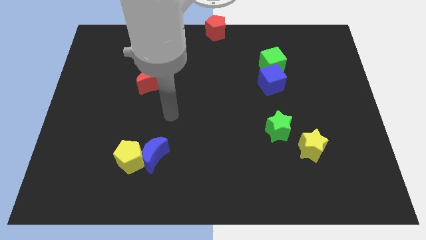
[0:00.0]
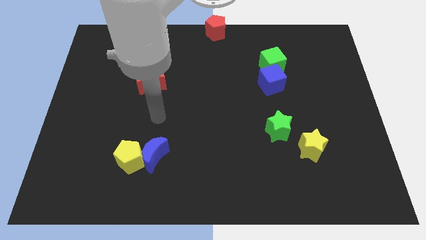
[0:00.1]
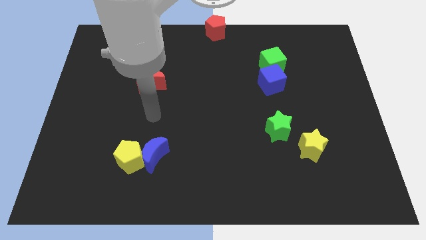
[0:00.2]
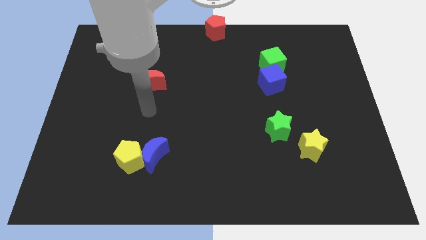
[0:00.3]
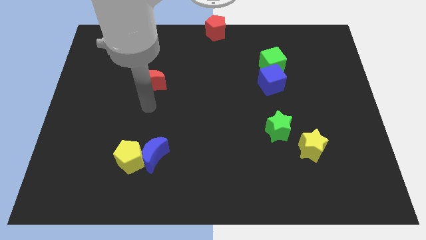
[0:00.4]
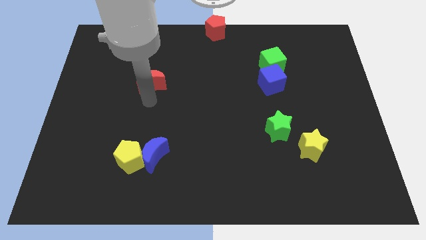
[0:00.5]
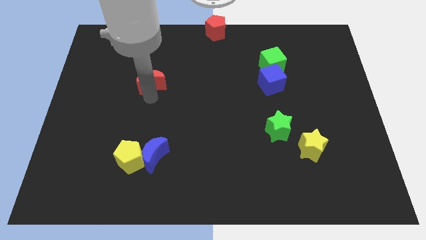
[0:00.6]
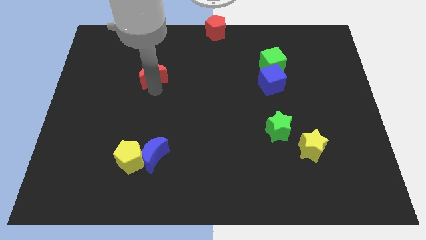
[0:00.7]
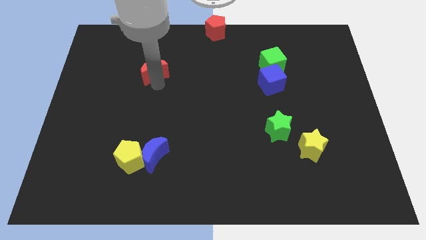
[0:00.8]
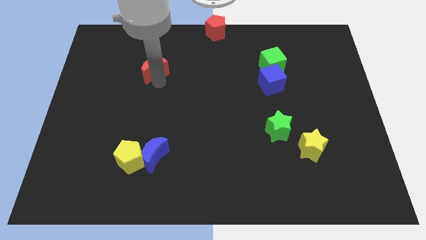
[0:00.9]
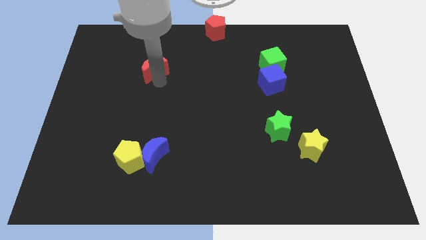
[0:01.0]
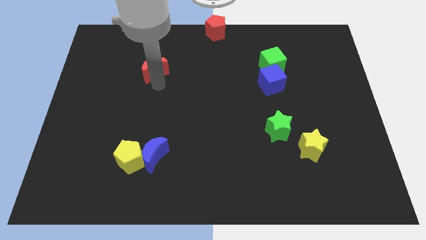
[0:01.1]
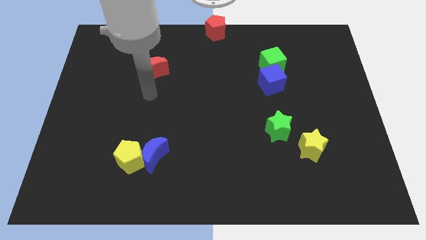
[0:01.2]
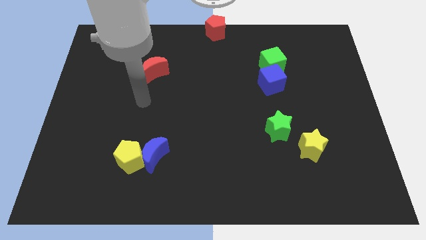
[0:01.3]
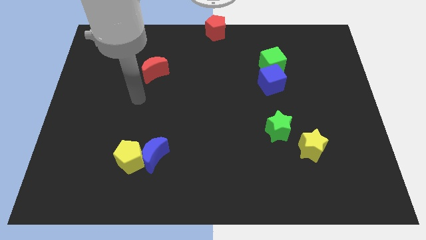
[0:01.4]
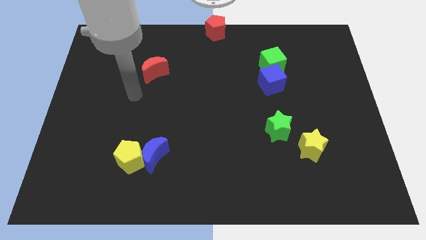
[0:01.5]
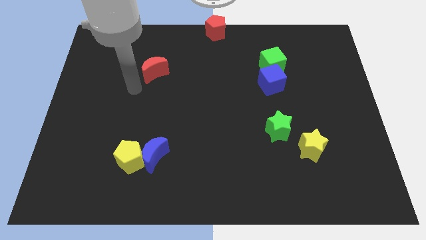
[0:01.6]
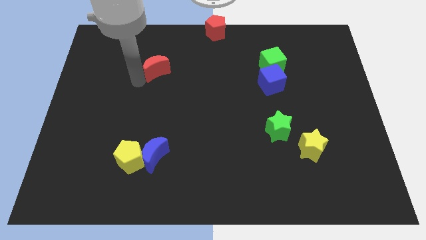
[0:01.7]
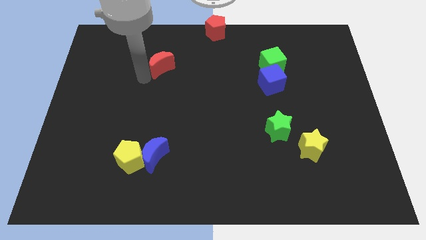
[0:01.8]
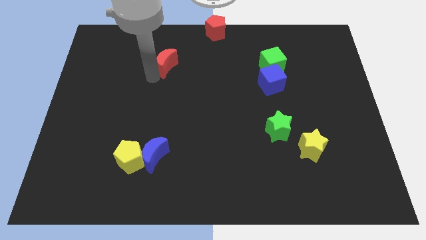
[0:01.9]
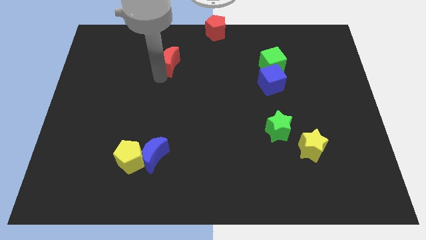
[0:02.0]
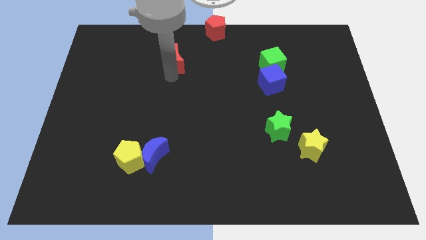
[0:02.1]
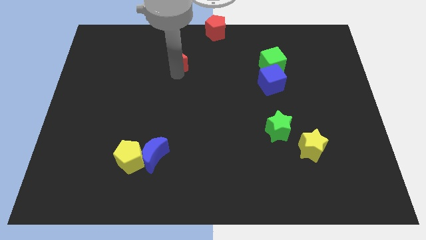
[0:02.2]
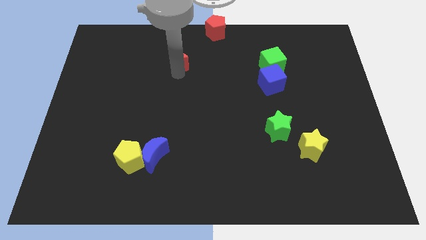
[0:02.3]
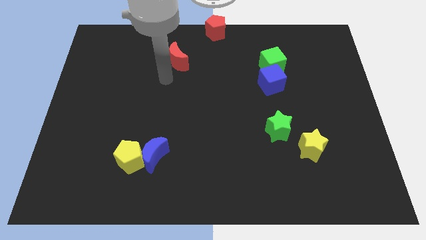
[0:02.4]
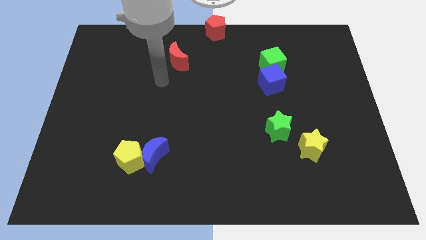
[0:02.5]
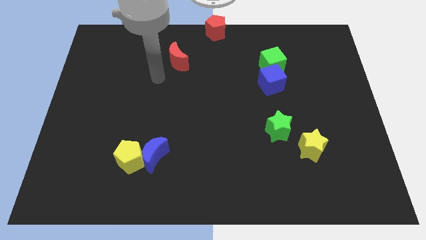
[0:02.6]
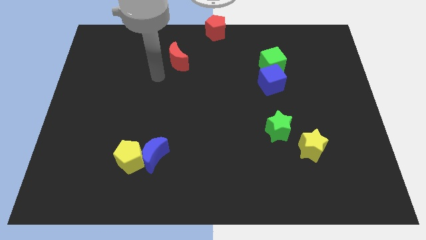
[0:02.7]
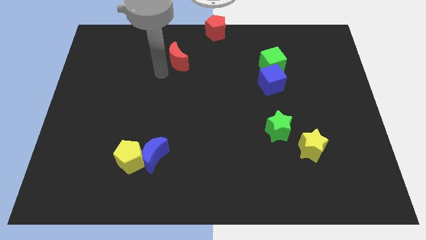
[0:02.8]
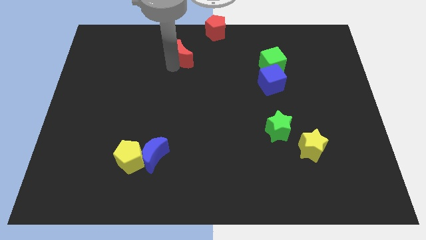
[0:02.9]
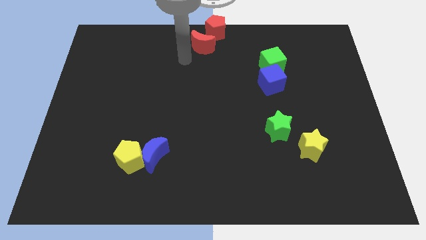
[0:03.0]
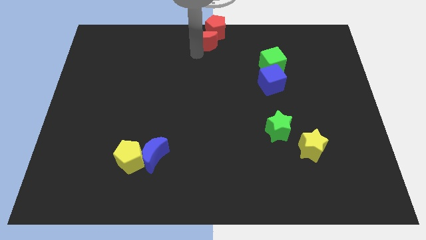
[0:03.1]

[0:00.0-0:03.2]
push the red crescent to the left bottom of the red pentagon

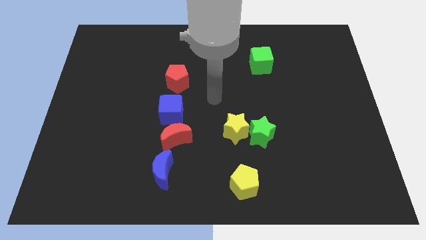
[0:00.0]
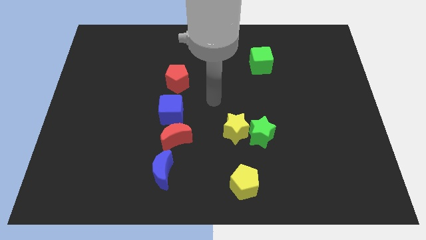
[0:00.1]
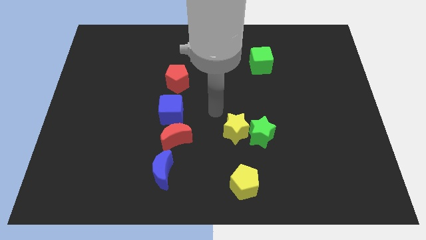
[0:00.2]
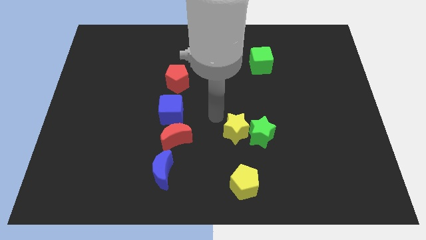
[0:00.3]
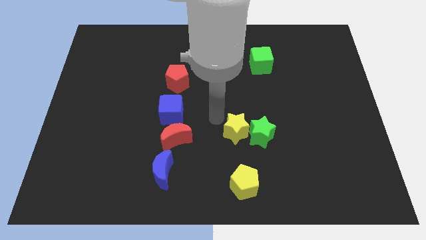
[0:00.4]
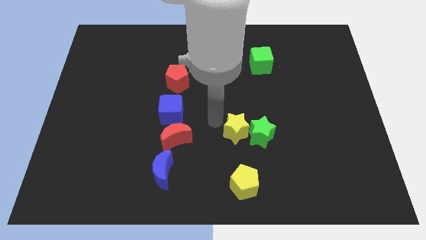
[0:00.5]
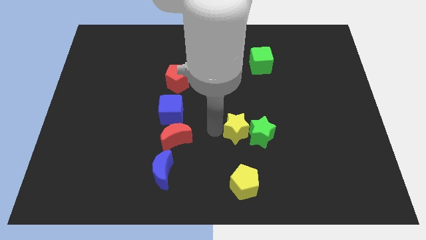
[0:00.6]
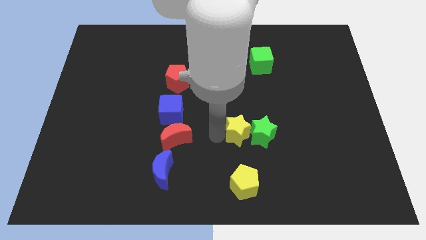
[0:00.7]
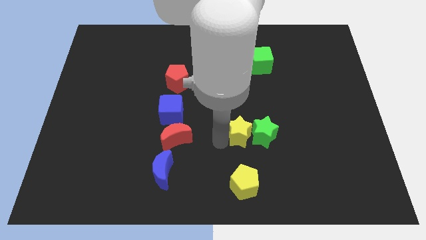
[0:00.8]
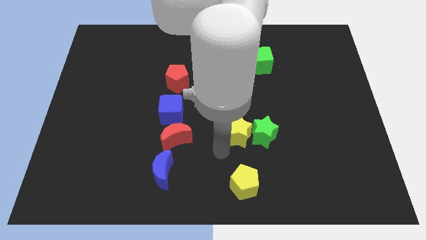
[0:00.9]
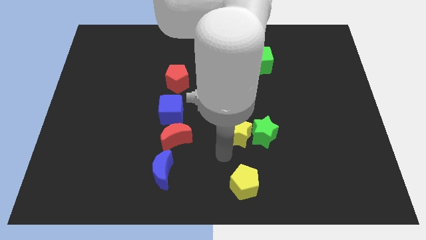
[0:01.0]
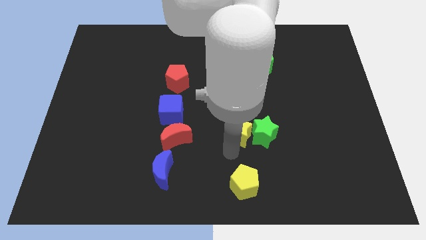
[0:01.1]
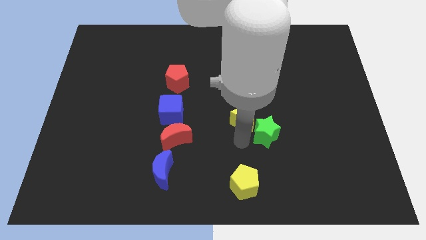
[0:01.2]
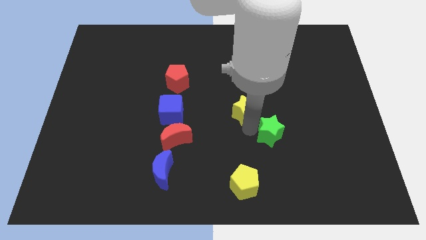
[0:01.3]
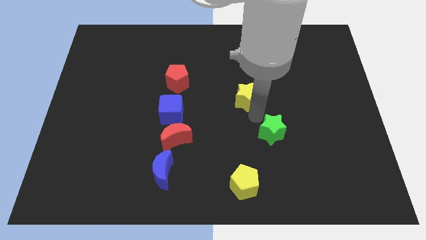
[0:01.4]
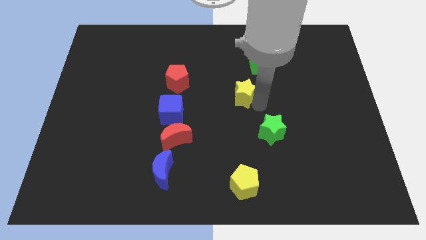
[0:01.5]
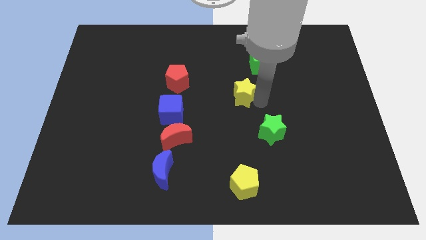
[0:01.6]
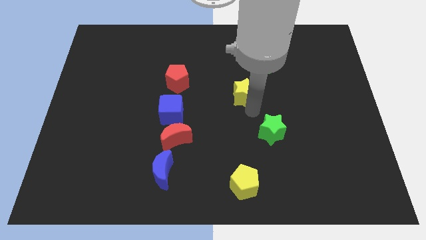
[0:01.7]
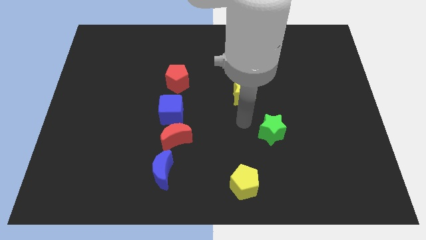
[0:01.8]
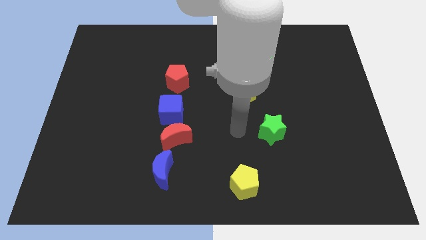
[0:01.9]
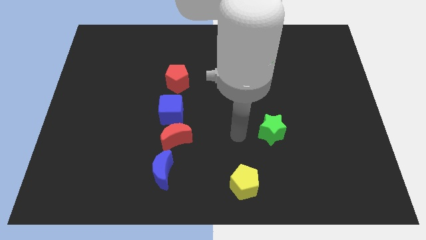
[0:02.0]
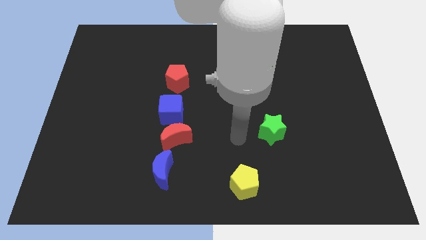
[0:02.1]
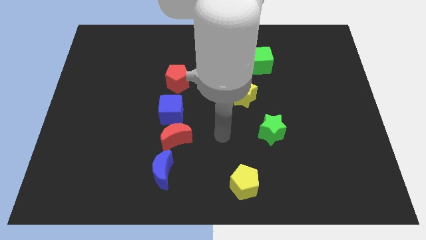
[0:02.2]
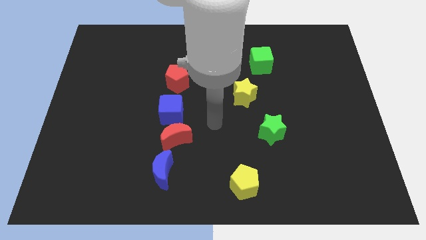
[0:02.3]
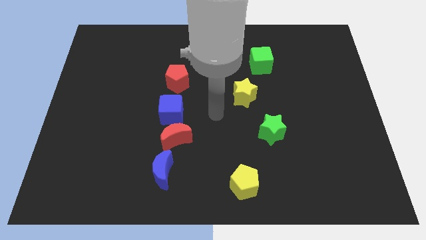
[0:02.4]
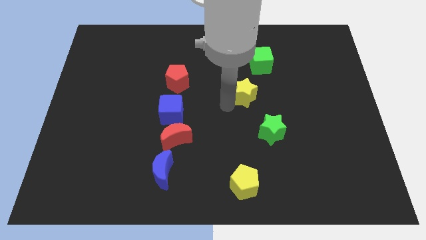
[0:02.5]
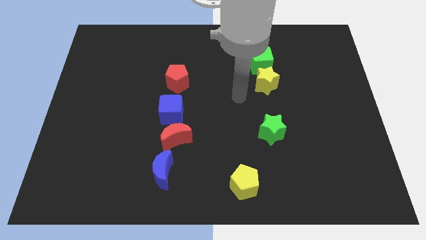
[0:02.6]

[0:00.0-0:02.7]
move the yellow star to the bottom side of the green cube

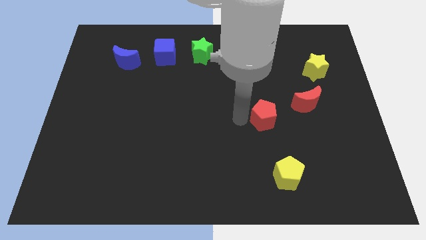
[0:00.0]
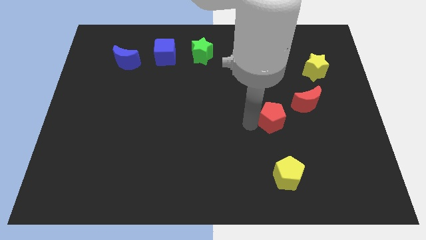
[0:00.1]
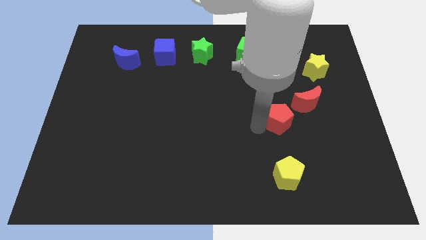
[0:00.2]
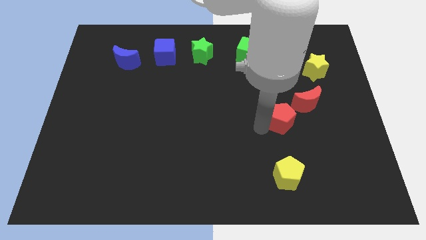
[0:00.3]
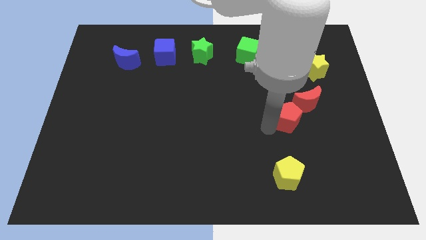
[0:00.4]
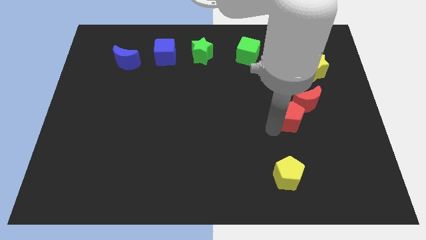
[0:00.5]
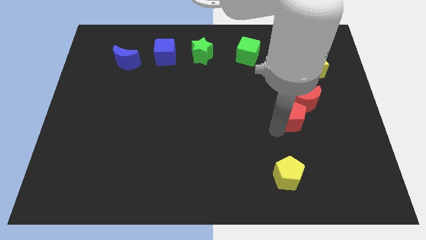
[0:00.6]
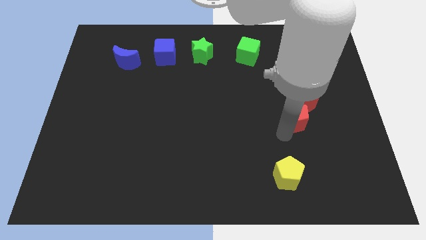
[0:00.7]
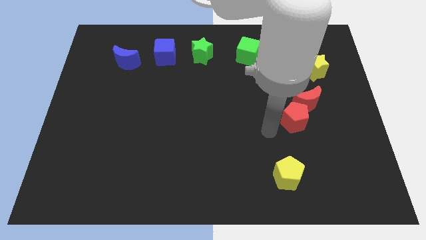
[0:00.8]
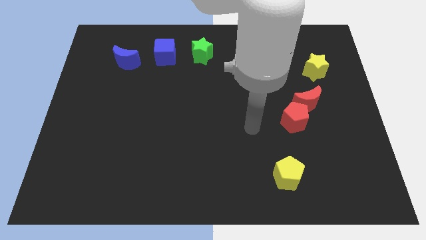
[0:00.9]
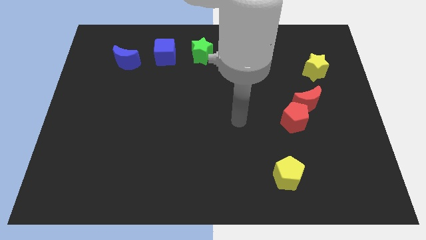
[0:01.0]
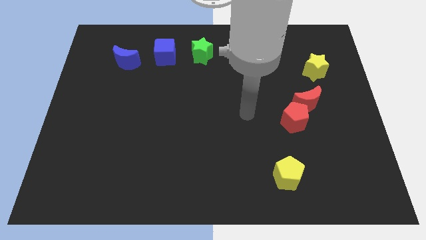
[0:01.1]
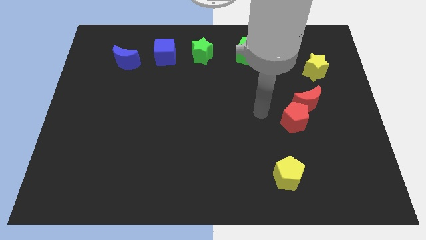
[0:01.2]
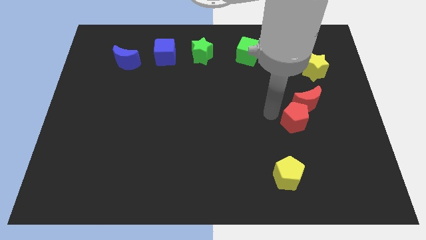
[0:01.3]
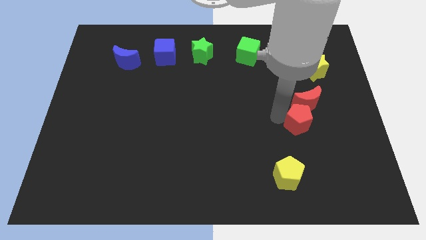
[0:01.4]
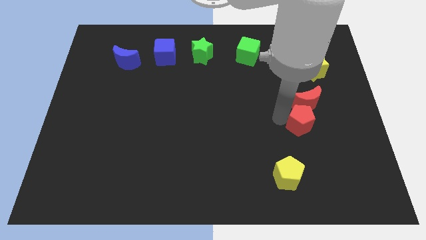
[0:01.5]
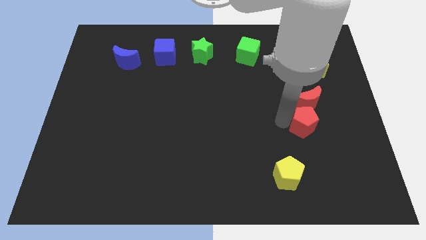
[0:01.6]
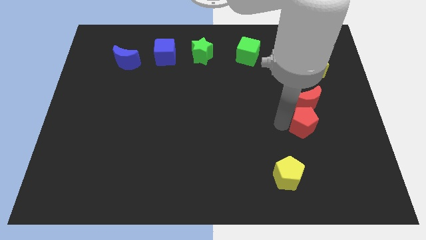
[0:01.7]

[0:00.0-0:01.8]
place the red pentagon under the red crescent

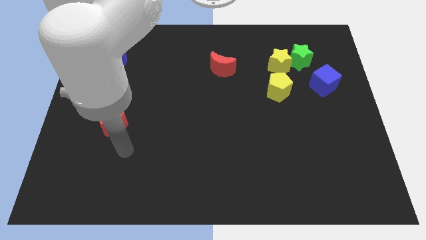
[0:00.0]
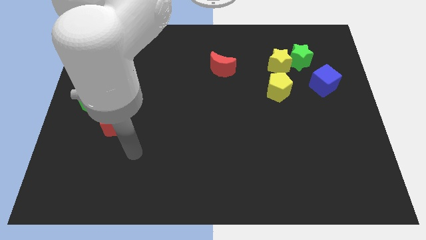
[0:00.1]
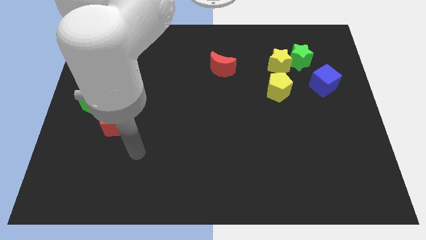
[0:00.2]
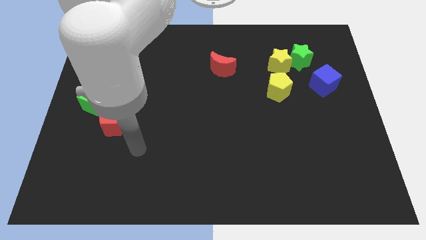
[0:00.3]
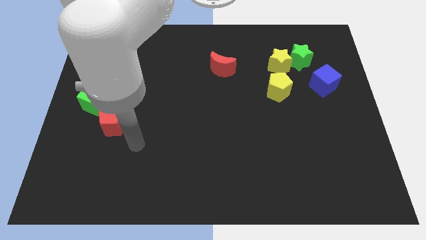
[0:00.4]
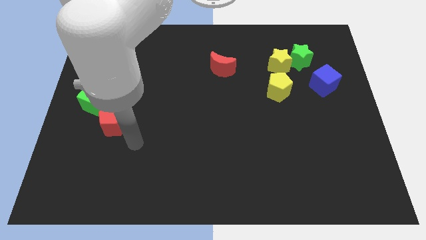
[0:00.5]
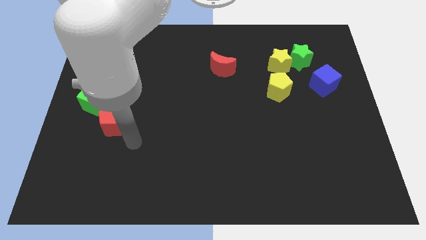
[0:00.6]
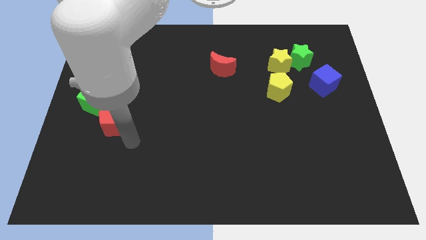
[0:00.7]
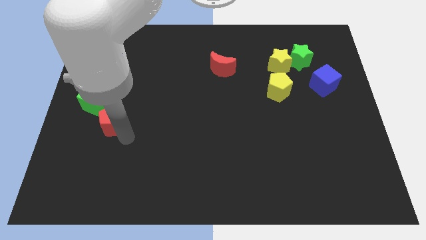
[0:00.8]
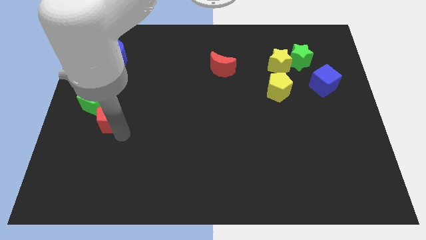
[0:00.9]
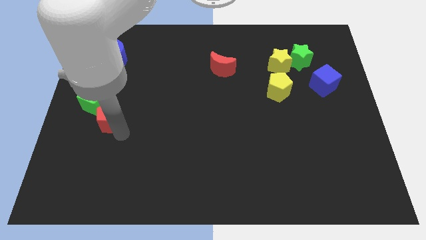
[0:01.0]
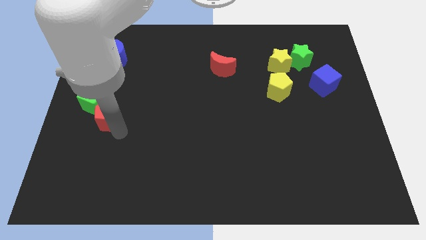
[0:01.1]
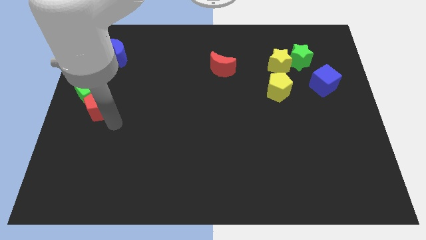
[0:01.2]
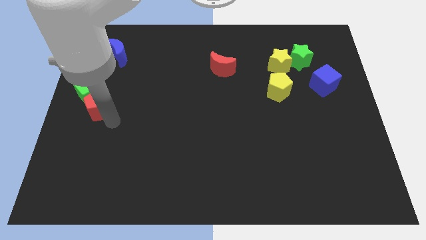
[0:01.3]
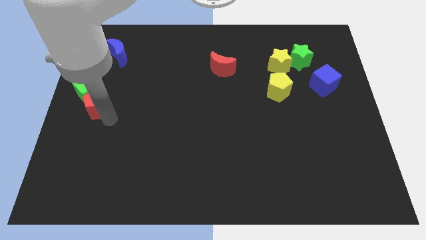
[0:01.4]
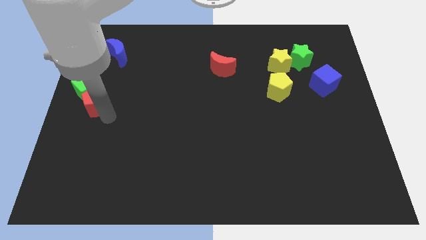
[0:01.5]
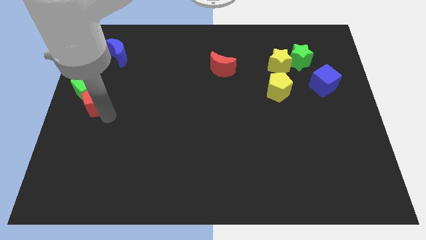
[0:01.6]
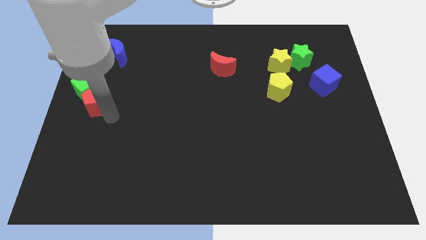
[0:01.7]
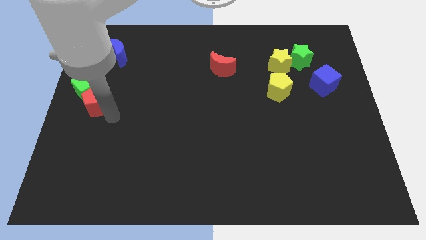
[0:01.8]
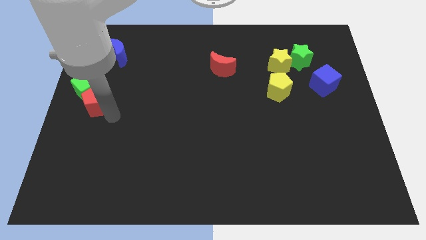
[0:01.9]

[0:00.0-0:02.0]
push the red pentagon into the green cube
